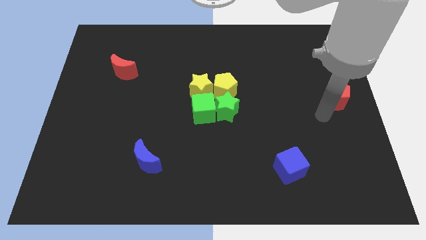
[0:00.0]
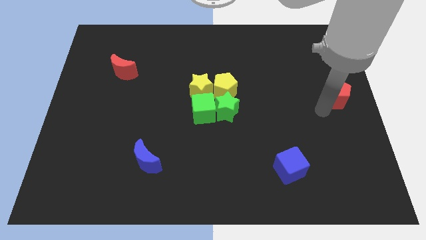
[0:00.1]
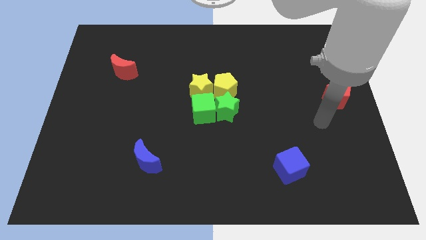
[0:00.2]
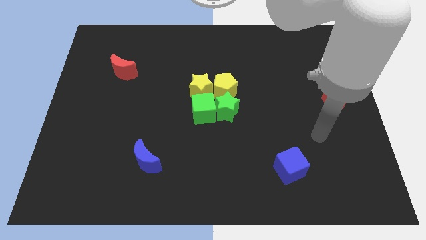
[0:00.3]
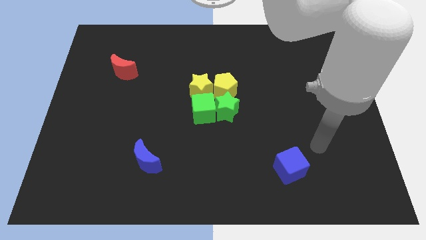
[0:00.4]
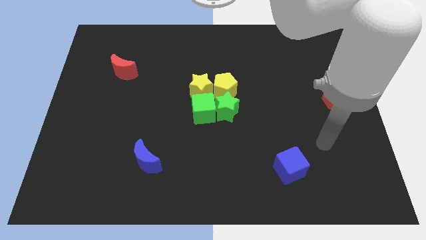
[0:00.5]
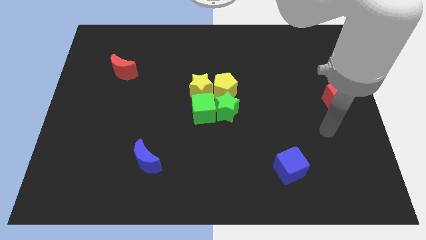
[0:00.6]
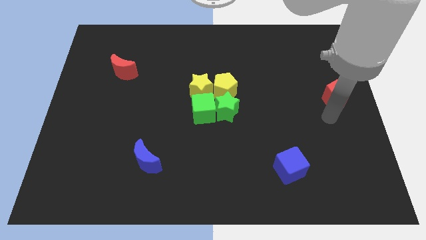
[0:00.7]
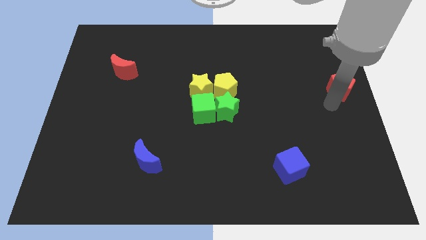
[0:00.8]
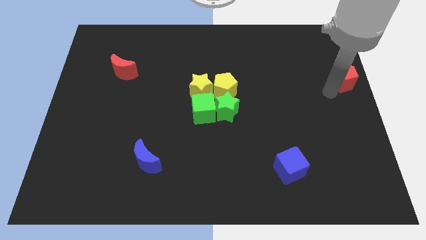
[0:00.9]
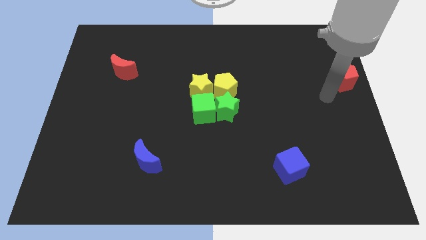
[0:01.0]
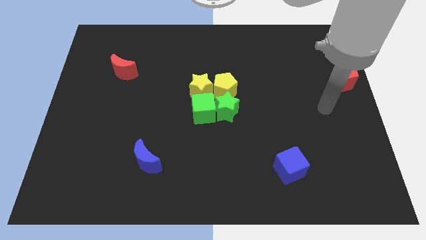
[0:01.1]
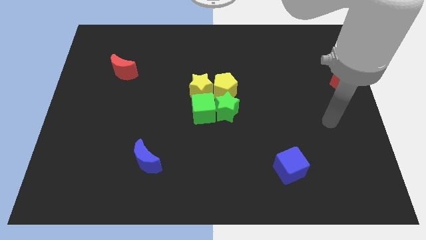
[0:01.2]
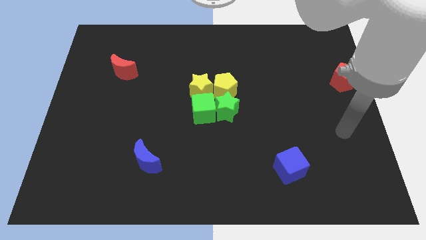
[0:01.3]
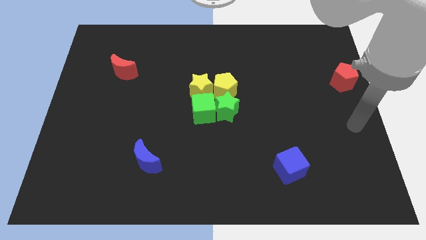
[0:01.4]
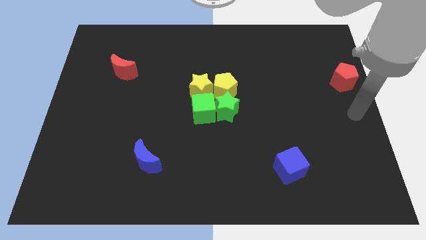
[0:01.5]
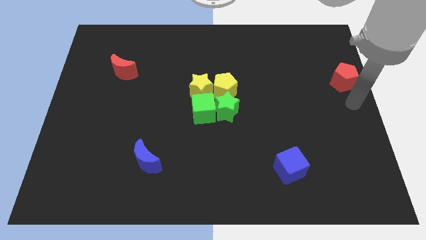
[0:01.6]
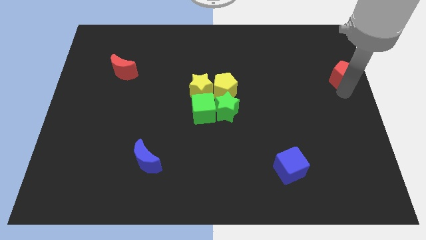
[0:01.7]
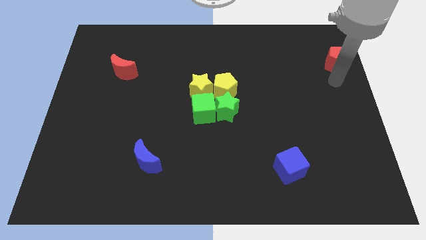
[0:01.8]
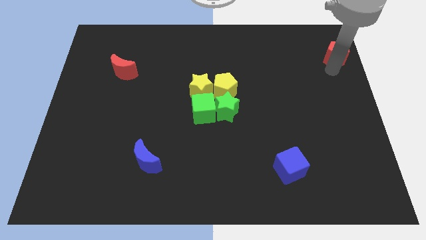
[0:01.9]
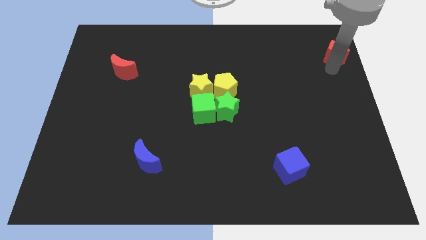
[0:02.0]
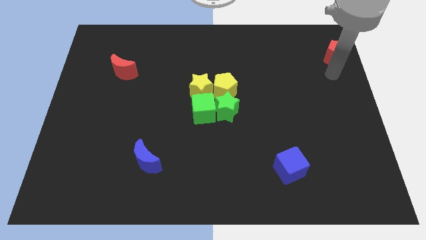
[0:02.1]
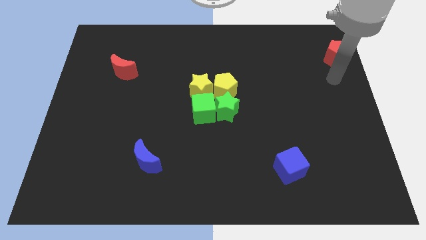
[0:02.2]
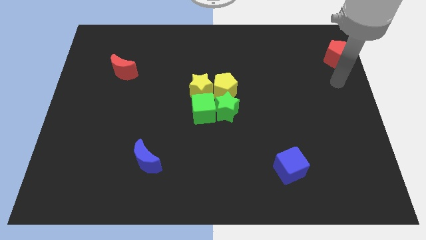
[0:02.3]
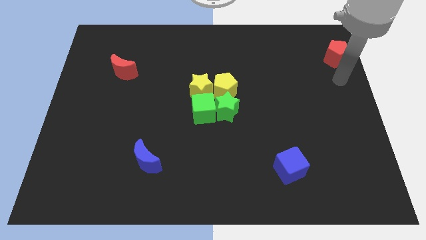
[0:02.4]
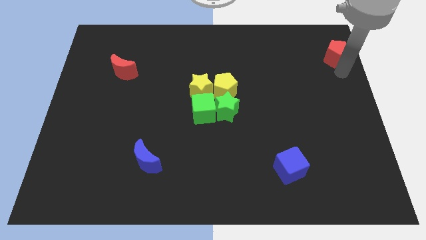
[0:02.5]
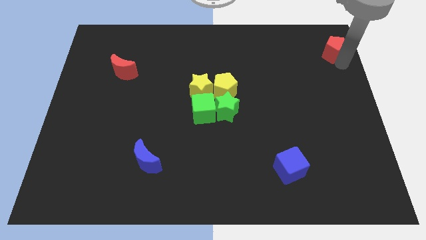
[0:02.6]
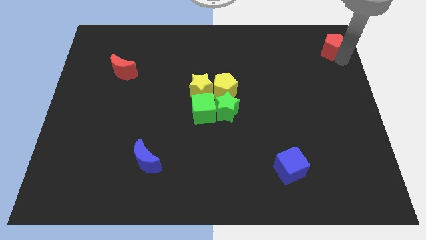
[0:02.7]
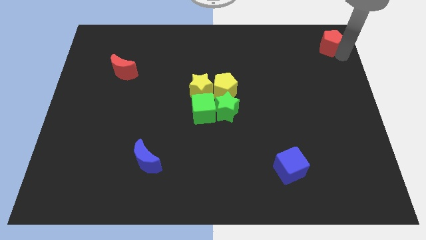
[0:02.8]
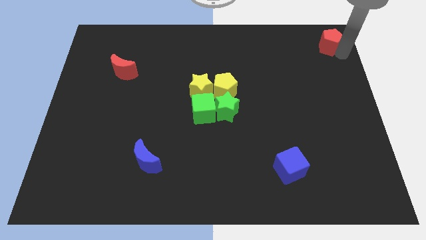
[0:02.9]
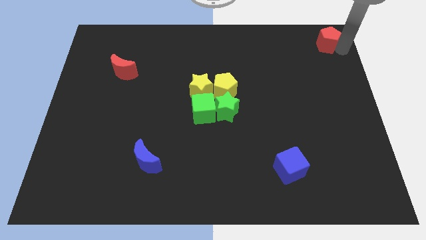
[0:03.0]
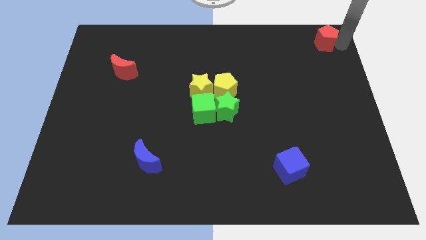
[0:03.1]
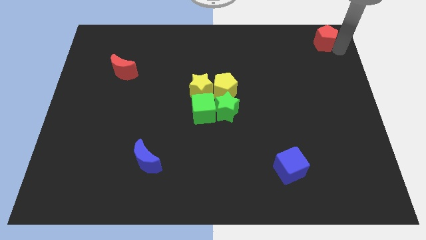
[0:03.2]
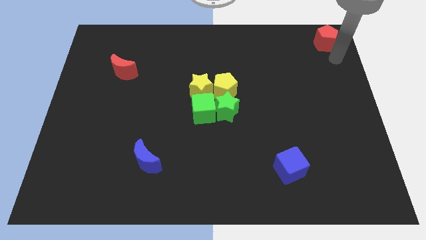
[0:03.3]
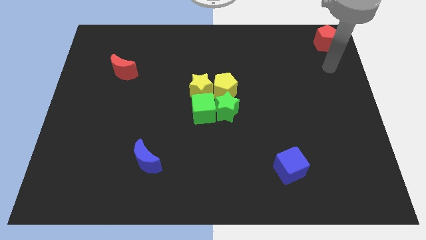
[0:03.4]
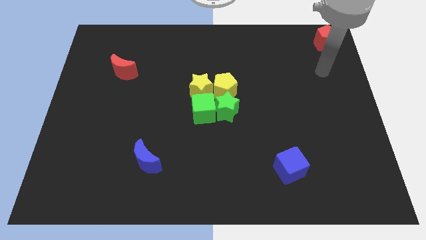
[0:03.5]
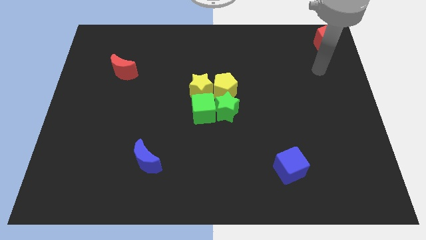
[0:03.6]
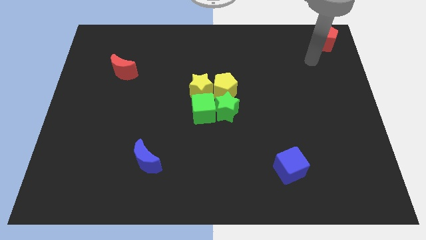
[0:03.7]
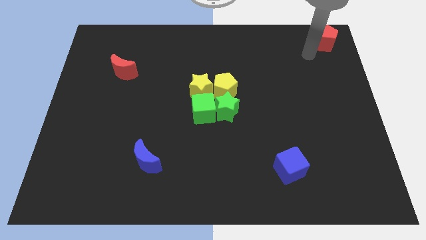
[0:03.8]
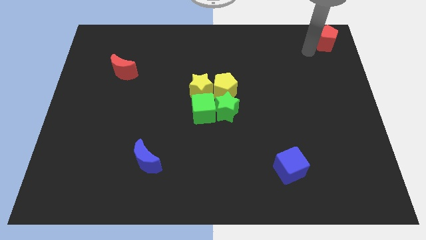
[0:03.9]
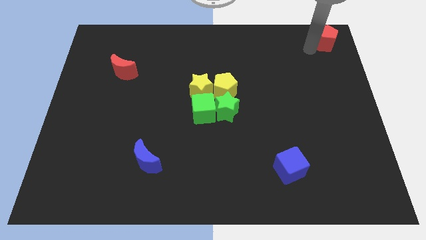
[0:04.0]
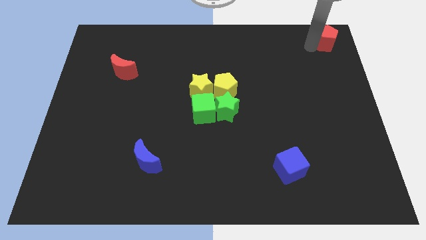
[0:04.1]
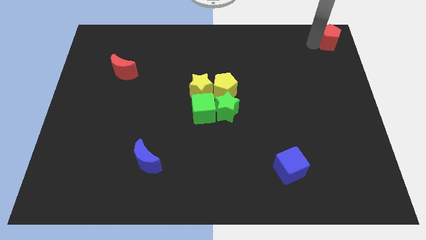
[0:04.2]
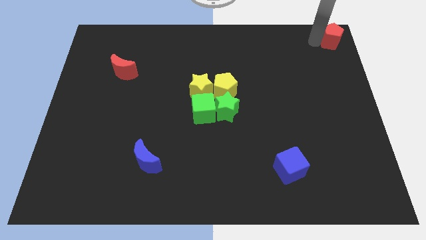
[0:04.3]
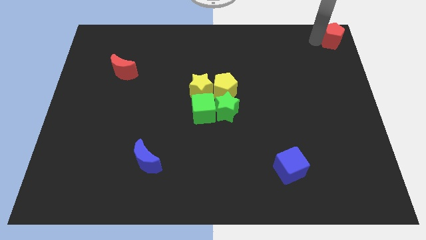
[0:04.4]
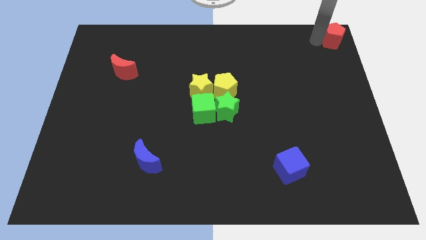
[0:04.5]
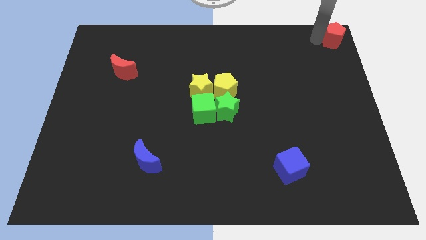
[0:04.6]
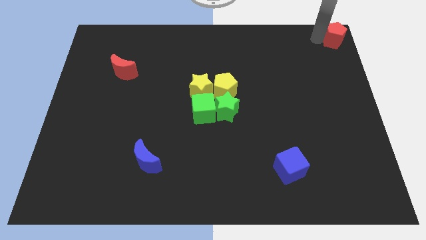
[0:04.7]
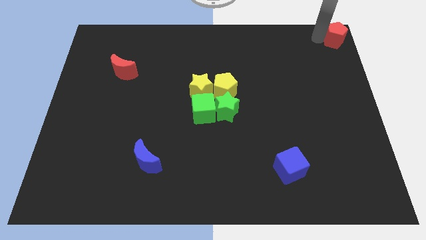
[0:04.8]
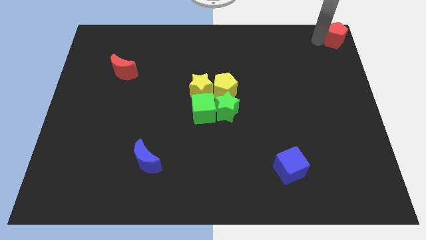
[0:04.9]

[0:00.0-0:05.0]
push the red pentagon to the top right corner of the board

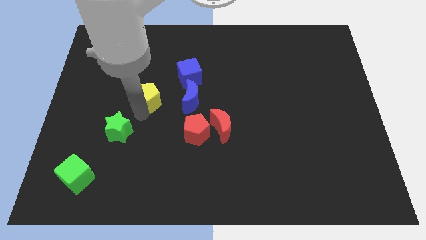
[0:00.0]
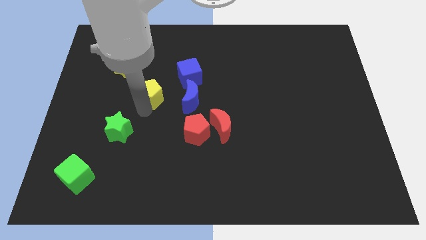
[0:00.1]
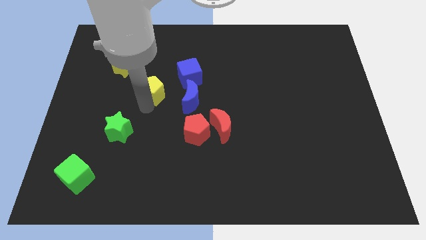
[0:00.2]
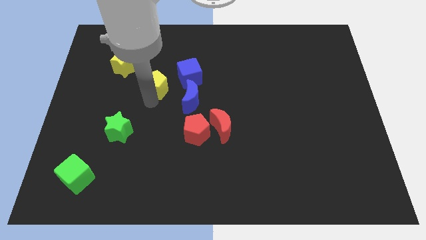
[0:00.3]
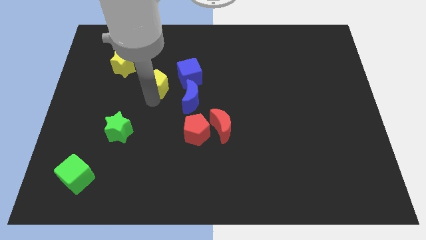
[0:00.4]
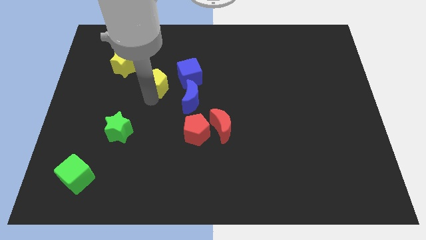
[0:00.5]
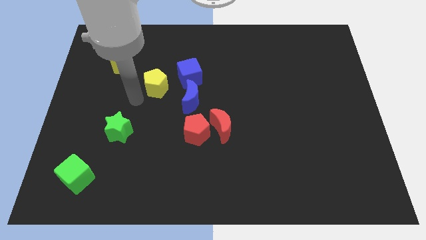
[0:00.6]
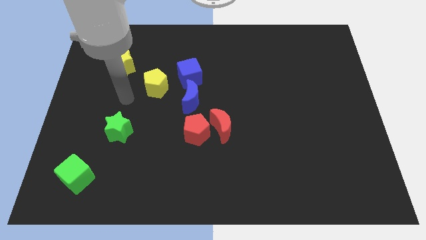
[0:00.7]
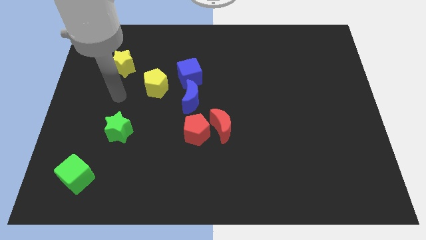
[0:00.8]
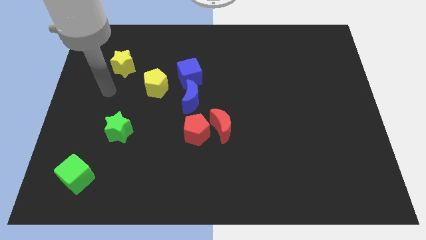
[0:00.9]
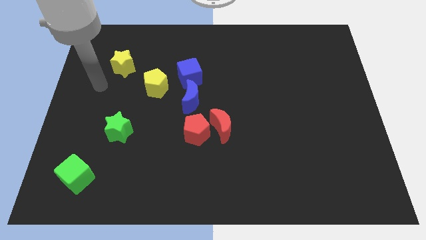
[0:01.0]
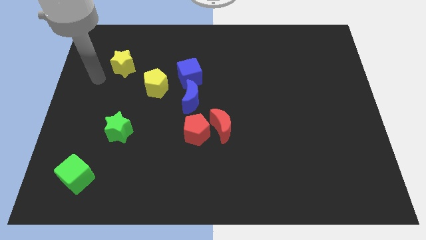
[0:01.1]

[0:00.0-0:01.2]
push yellow pentagon slightly upwards

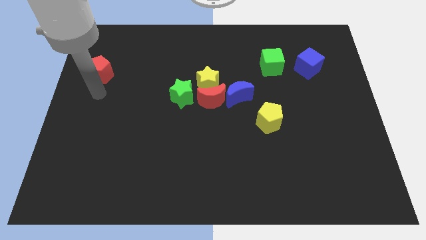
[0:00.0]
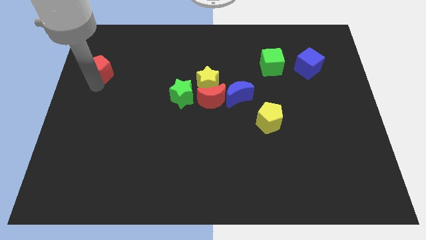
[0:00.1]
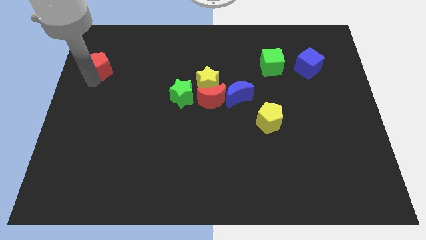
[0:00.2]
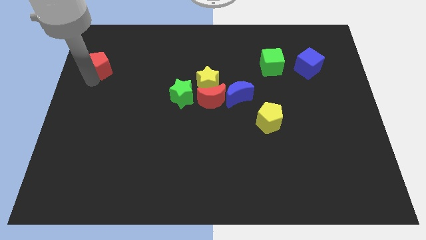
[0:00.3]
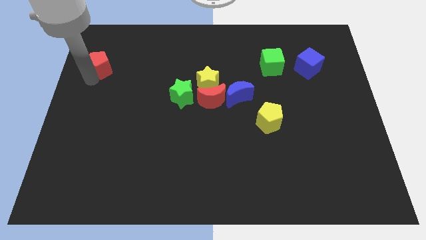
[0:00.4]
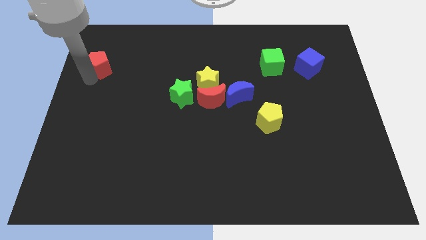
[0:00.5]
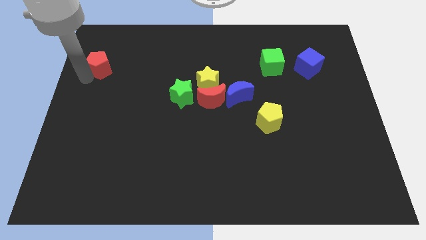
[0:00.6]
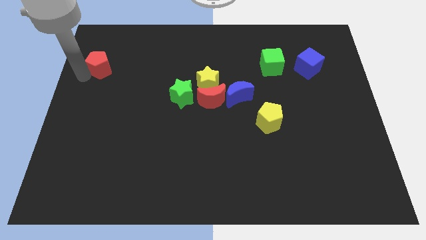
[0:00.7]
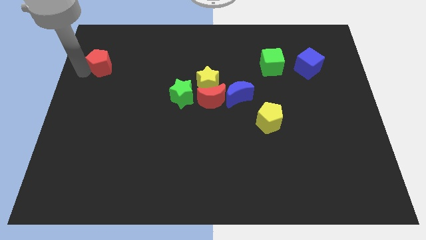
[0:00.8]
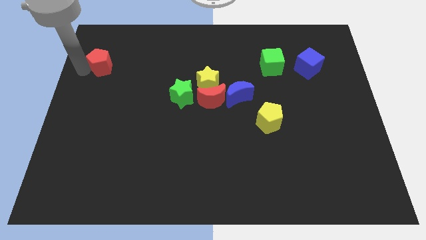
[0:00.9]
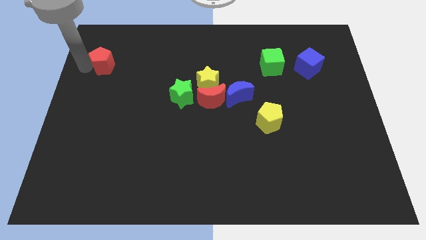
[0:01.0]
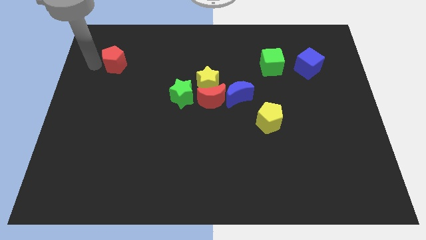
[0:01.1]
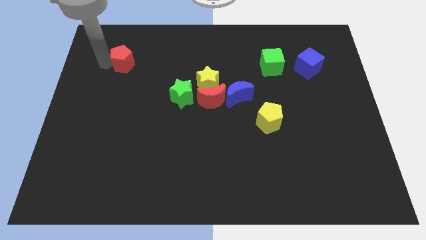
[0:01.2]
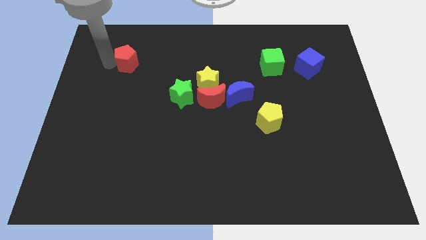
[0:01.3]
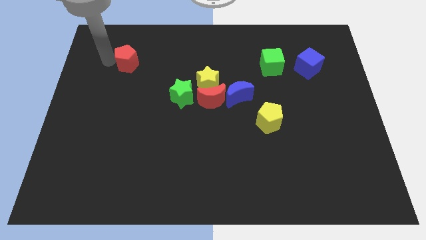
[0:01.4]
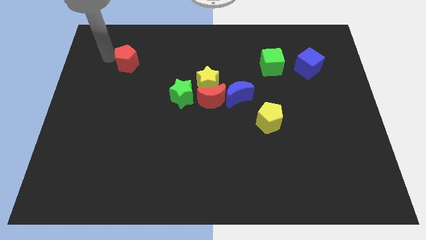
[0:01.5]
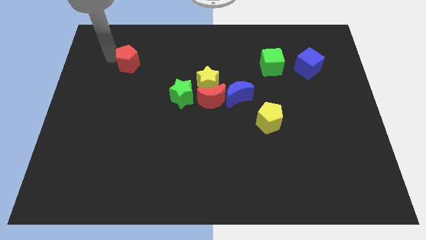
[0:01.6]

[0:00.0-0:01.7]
slightly push the red pentagon to the top right

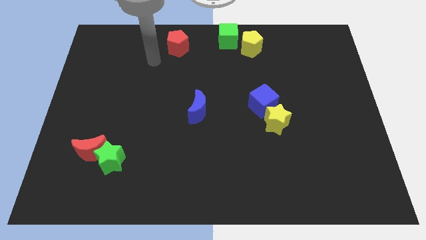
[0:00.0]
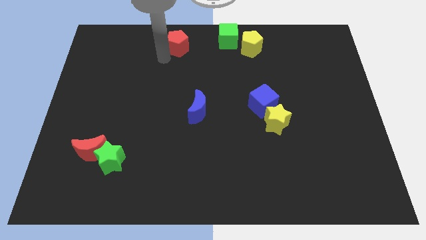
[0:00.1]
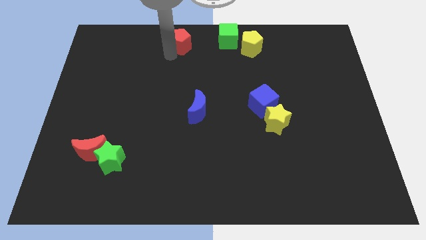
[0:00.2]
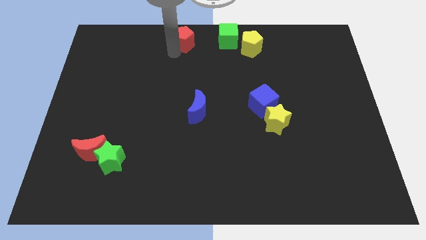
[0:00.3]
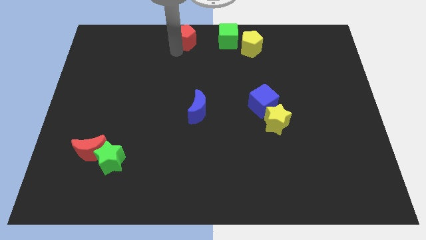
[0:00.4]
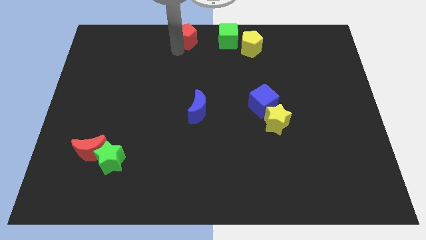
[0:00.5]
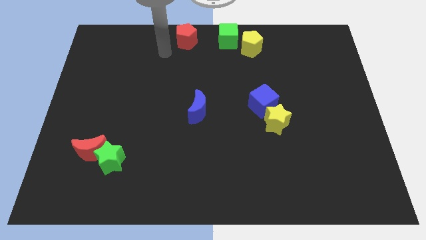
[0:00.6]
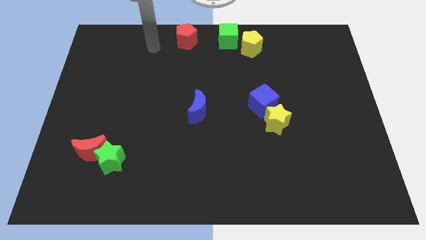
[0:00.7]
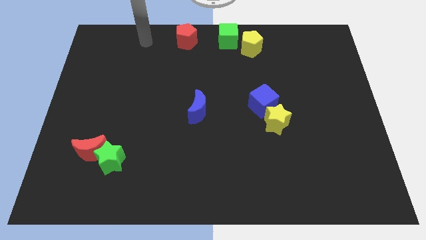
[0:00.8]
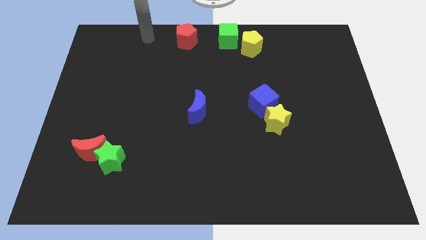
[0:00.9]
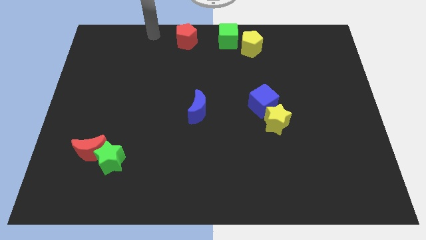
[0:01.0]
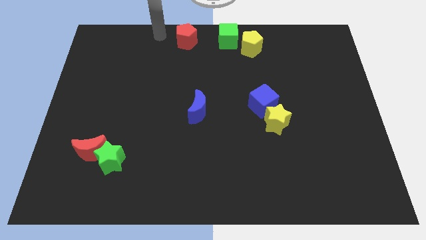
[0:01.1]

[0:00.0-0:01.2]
put the red pentagon left to the green cube
